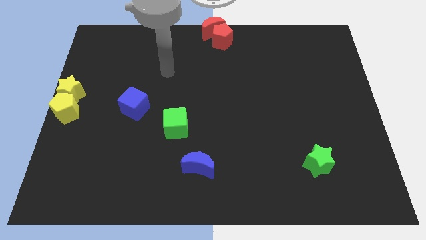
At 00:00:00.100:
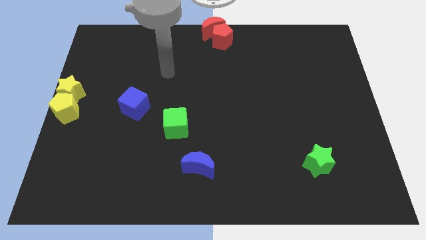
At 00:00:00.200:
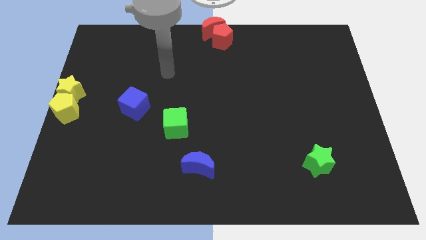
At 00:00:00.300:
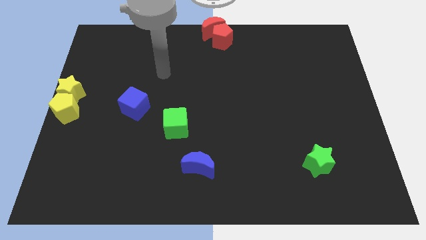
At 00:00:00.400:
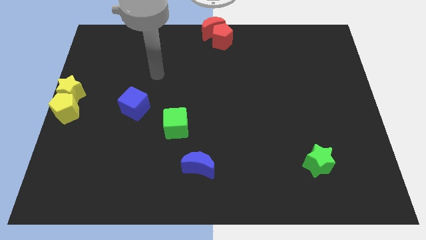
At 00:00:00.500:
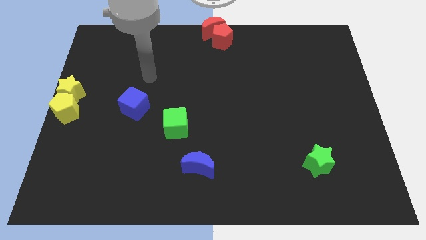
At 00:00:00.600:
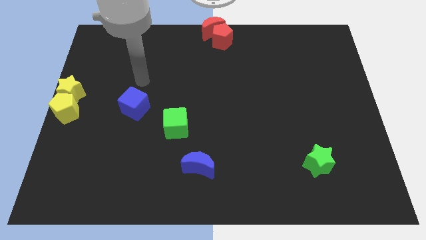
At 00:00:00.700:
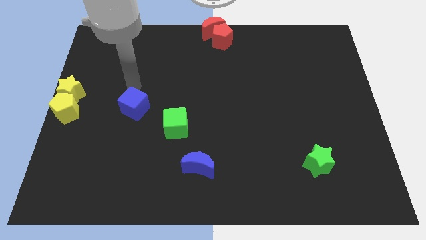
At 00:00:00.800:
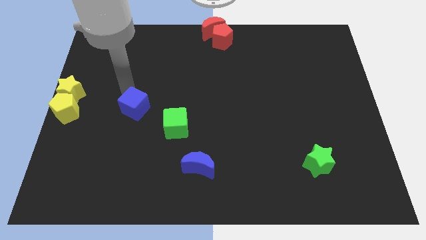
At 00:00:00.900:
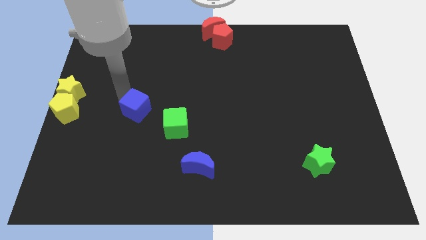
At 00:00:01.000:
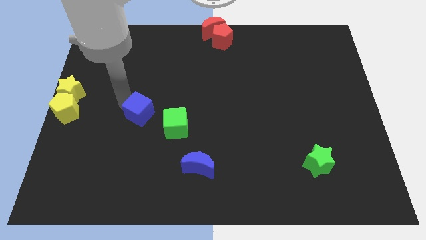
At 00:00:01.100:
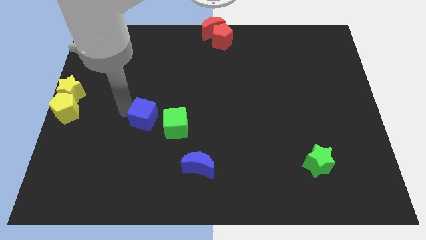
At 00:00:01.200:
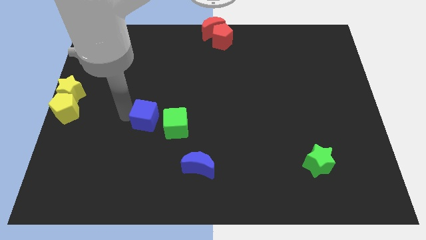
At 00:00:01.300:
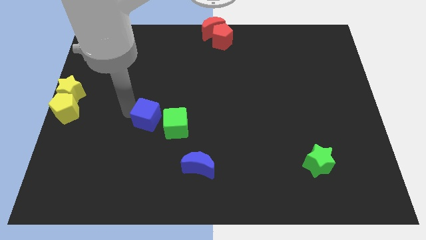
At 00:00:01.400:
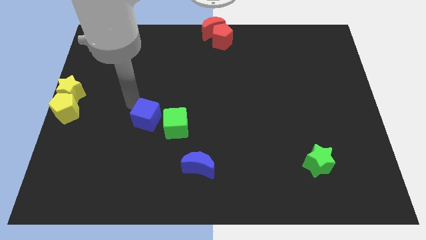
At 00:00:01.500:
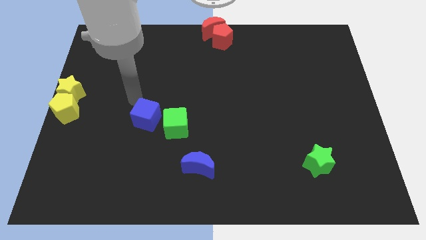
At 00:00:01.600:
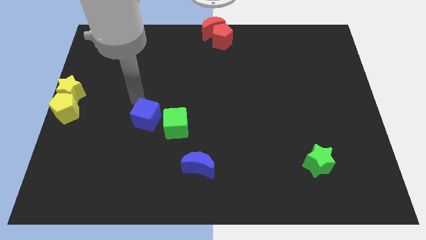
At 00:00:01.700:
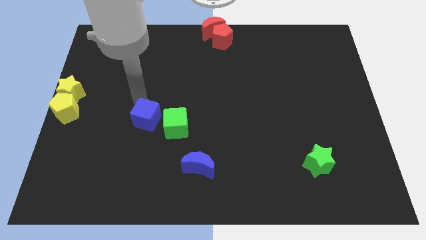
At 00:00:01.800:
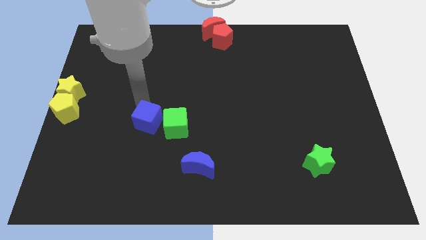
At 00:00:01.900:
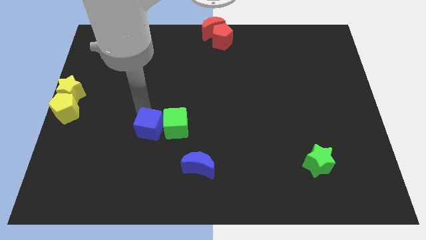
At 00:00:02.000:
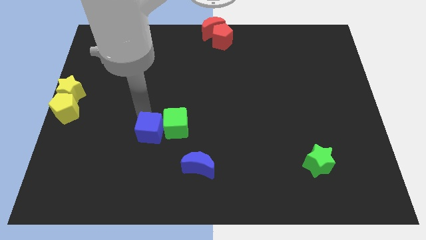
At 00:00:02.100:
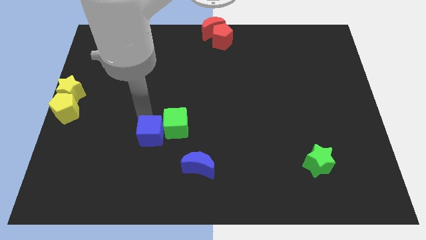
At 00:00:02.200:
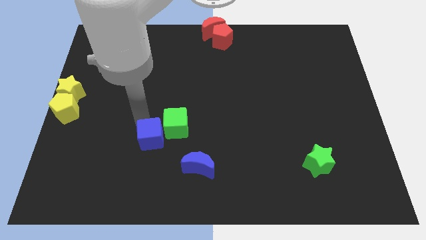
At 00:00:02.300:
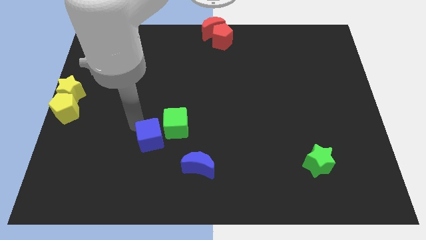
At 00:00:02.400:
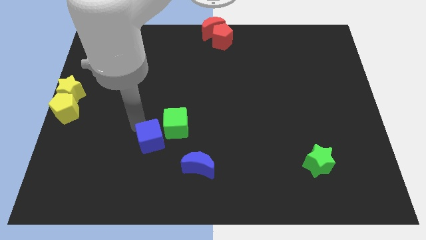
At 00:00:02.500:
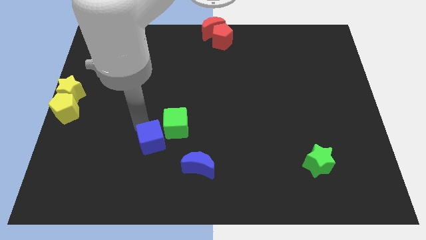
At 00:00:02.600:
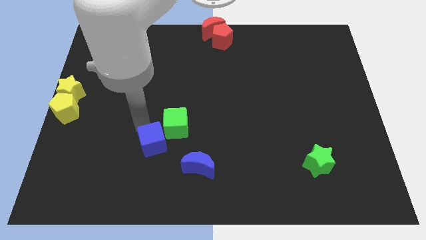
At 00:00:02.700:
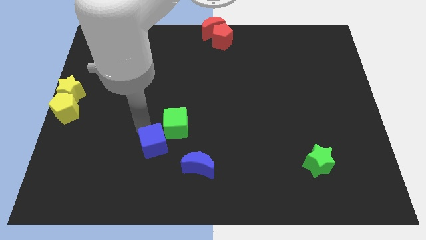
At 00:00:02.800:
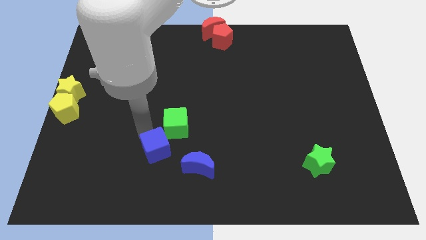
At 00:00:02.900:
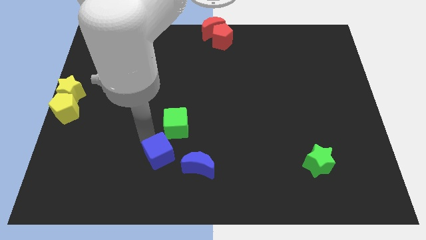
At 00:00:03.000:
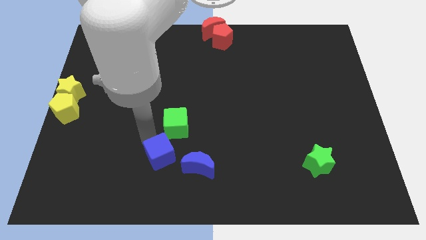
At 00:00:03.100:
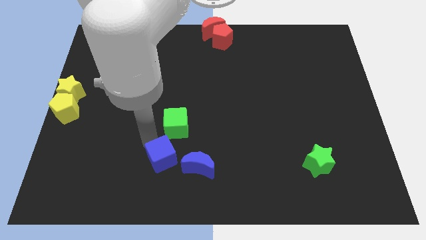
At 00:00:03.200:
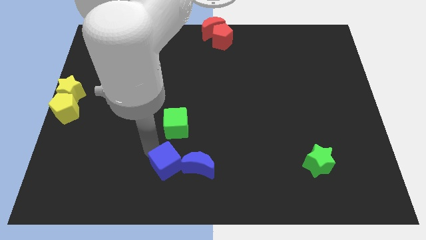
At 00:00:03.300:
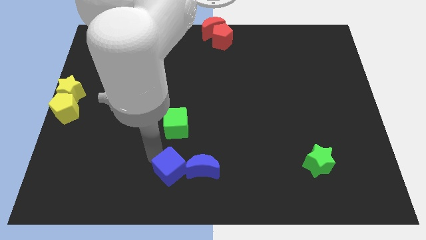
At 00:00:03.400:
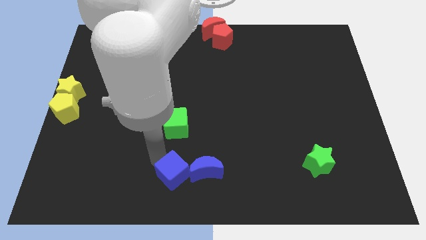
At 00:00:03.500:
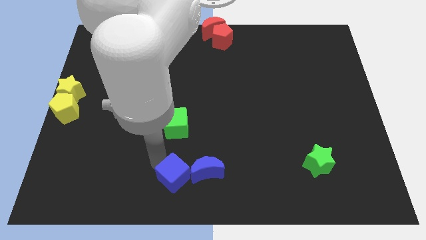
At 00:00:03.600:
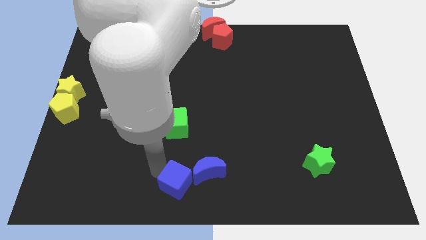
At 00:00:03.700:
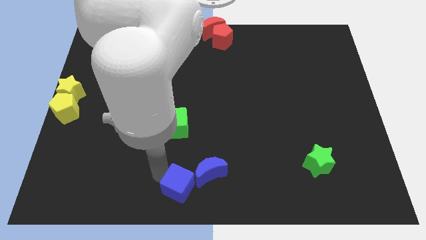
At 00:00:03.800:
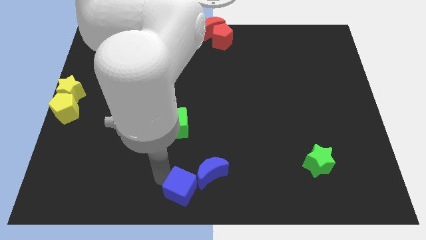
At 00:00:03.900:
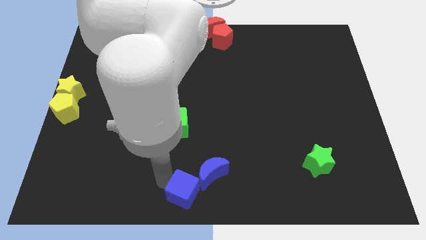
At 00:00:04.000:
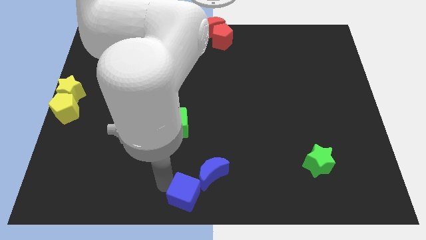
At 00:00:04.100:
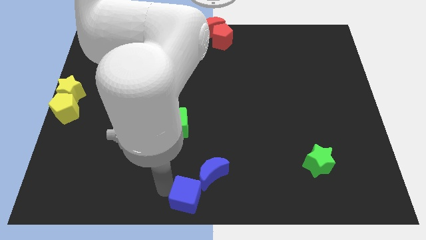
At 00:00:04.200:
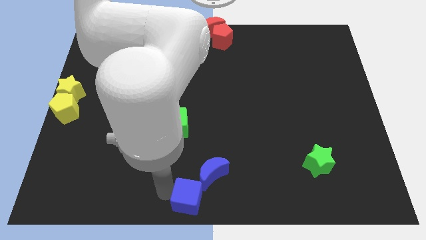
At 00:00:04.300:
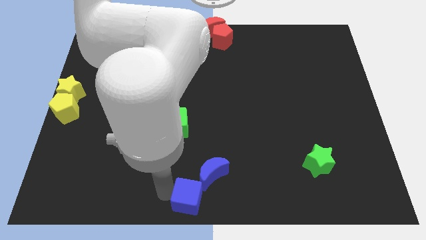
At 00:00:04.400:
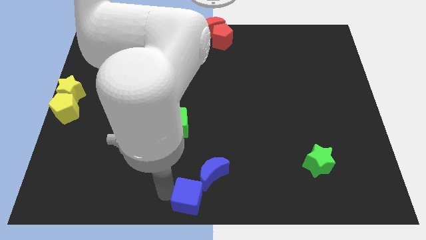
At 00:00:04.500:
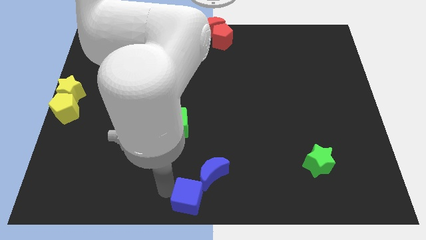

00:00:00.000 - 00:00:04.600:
push the blue cube into the blue moon

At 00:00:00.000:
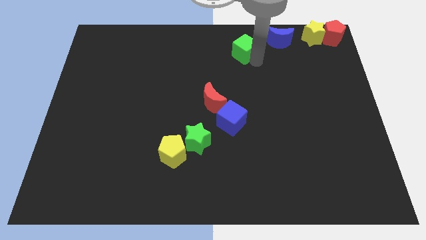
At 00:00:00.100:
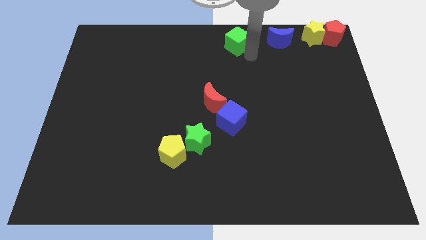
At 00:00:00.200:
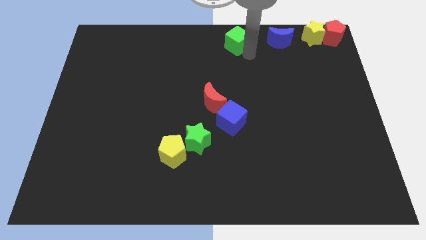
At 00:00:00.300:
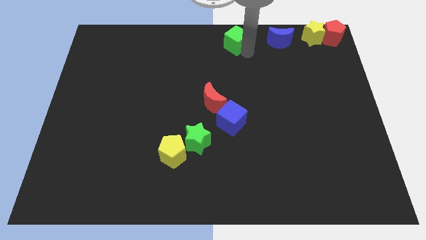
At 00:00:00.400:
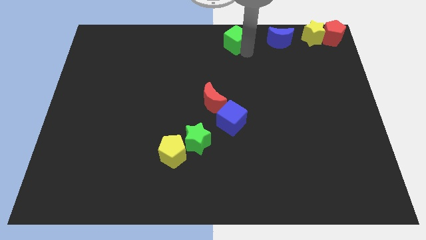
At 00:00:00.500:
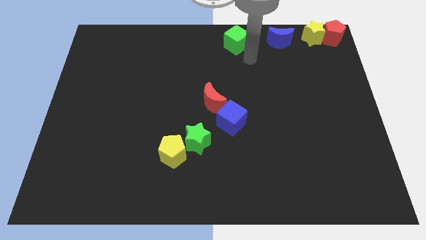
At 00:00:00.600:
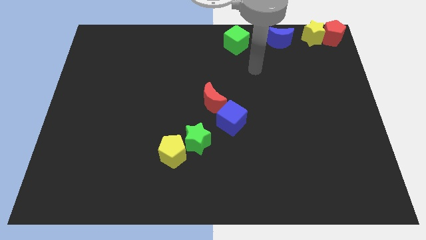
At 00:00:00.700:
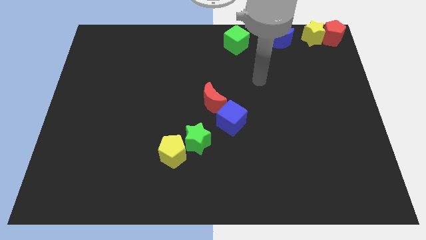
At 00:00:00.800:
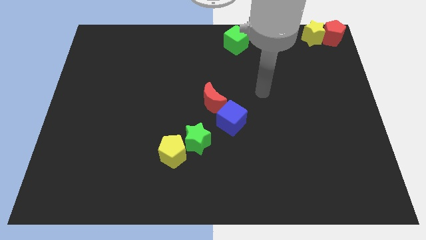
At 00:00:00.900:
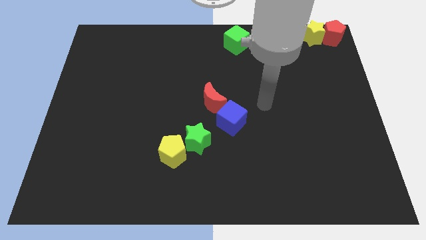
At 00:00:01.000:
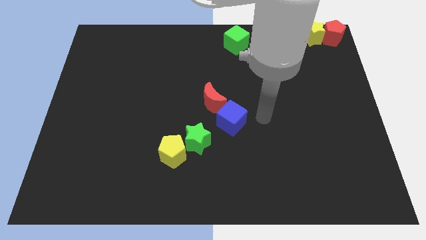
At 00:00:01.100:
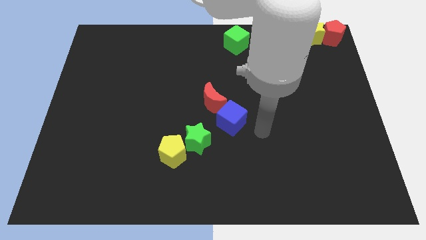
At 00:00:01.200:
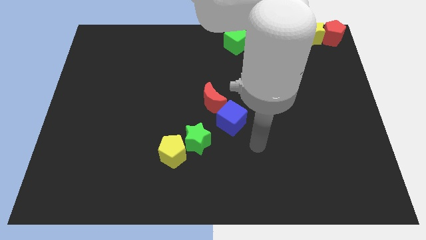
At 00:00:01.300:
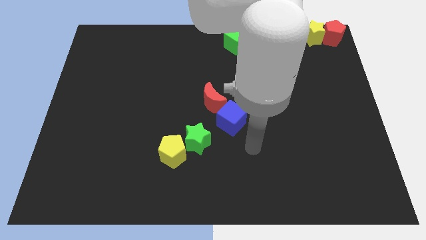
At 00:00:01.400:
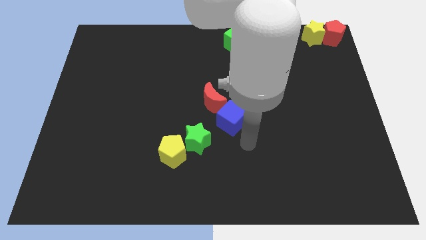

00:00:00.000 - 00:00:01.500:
place the green cube to the left of the blue moon

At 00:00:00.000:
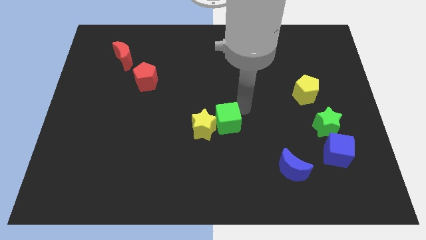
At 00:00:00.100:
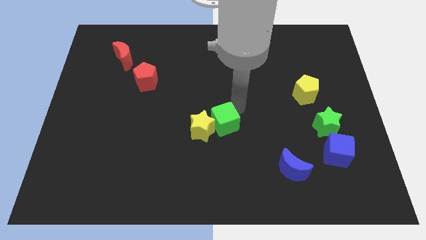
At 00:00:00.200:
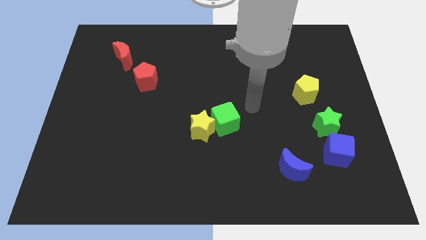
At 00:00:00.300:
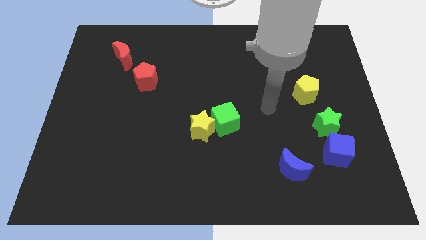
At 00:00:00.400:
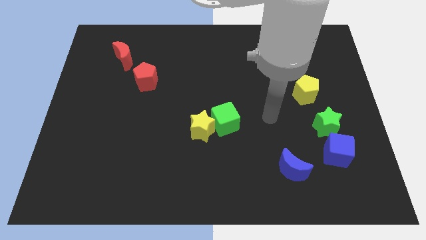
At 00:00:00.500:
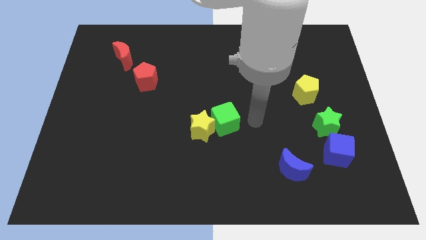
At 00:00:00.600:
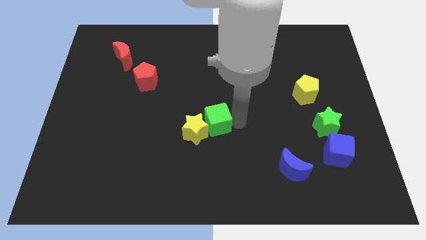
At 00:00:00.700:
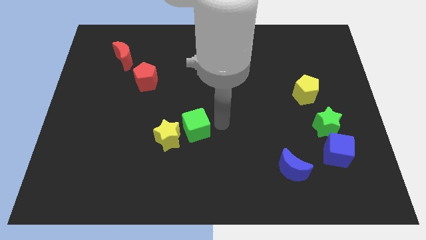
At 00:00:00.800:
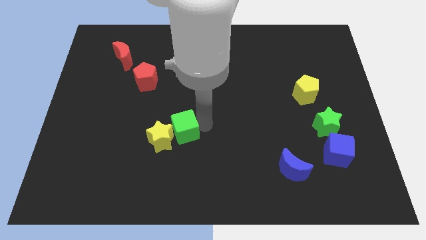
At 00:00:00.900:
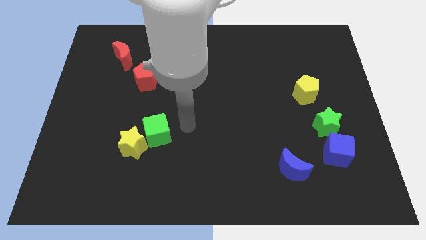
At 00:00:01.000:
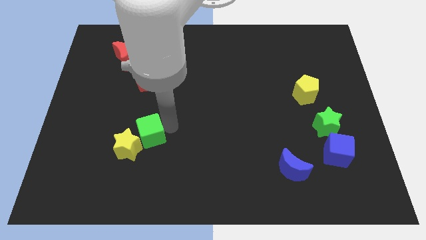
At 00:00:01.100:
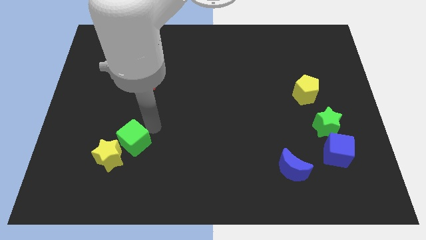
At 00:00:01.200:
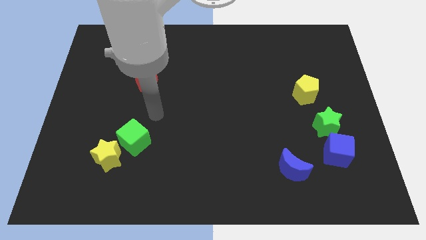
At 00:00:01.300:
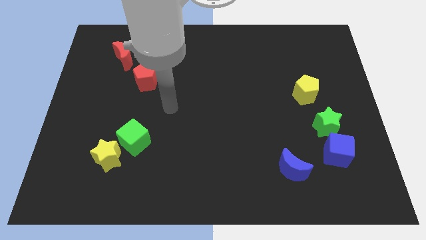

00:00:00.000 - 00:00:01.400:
move green cube along with yellow star to the bottom left

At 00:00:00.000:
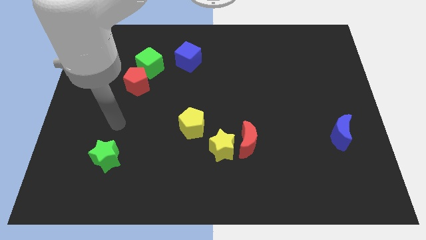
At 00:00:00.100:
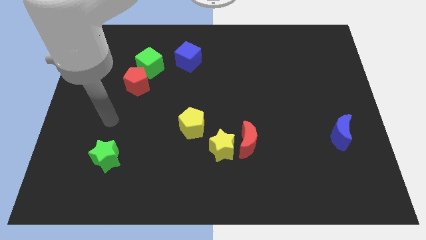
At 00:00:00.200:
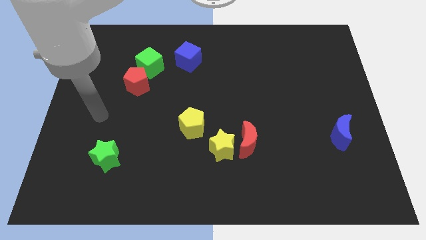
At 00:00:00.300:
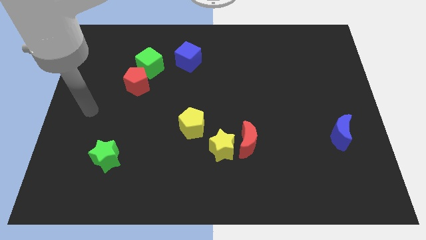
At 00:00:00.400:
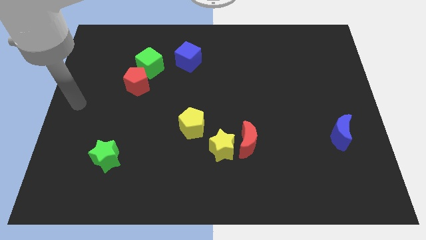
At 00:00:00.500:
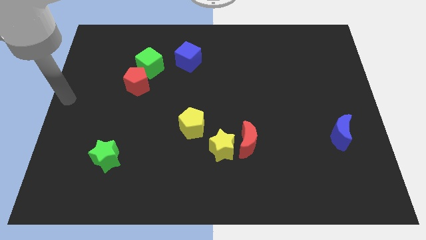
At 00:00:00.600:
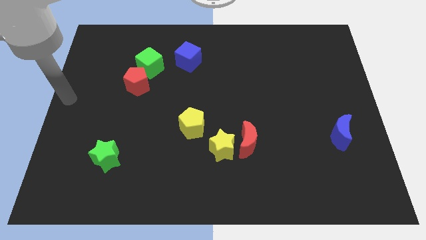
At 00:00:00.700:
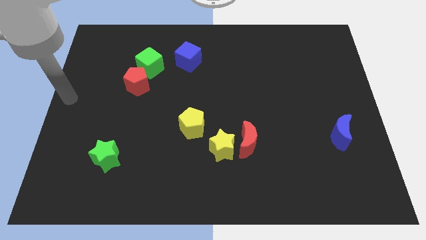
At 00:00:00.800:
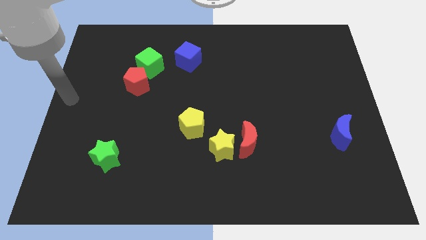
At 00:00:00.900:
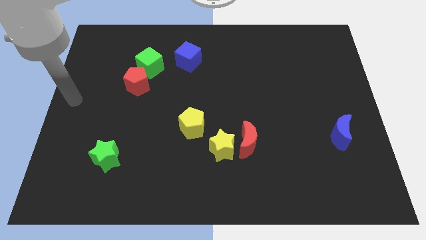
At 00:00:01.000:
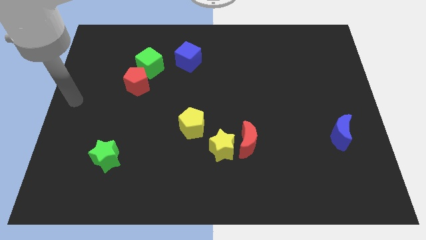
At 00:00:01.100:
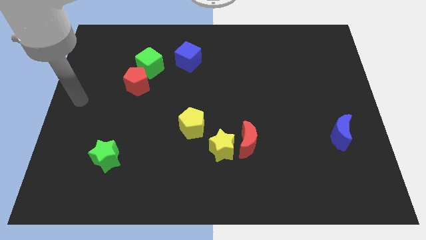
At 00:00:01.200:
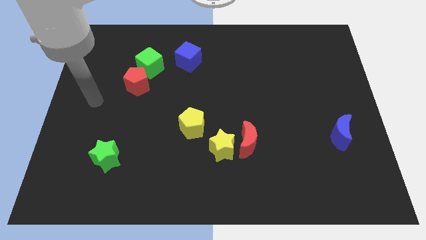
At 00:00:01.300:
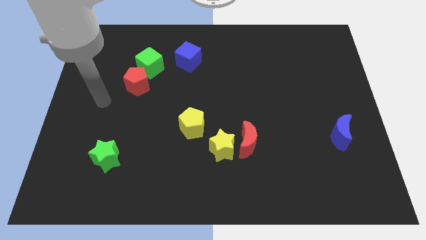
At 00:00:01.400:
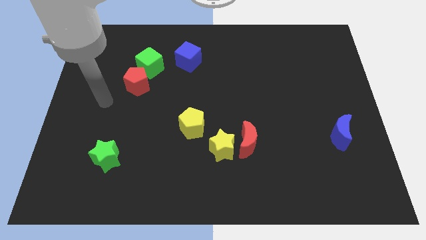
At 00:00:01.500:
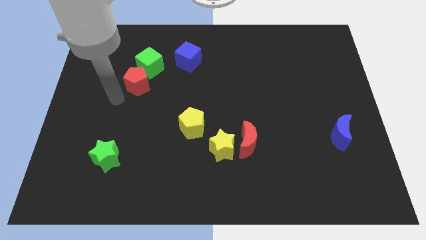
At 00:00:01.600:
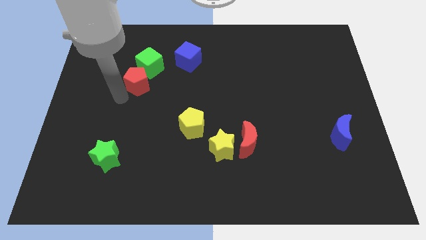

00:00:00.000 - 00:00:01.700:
move the arm to the bottom left of the red pentagon
